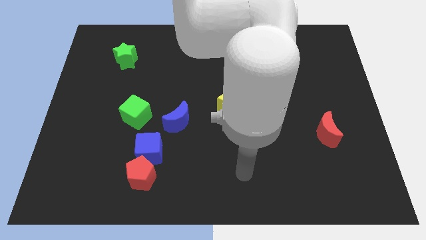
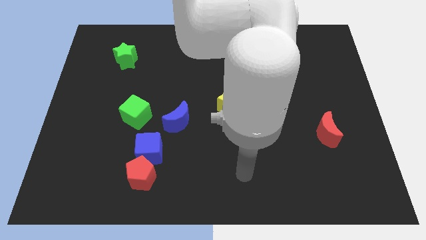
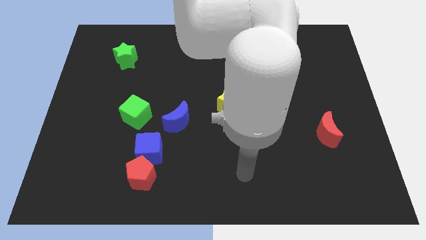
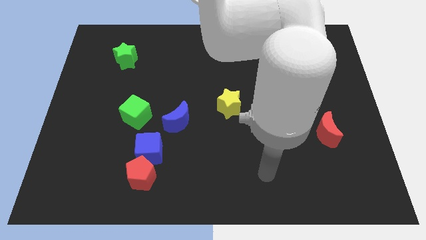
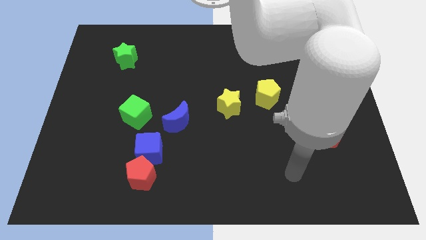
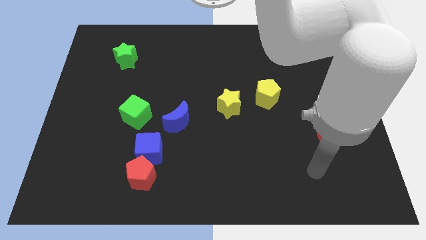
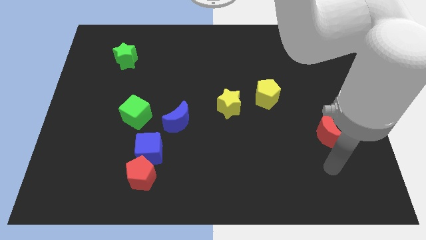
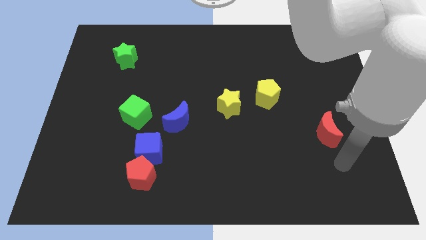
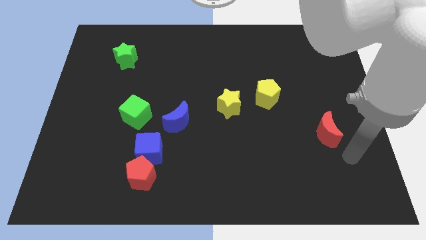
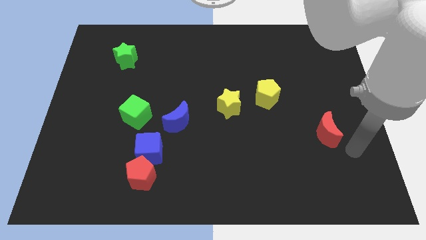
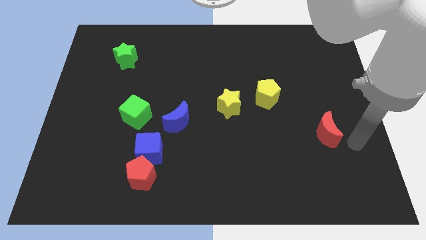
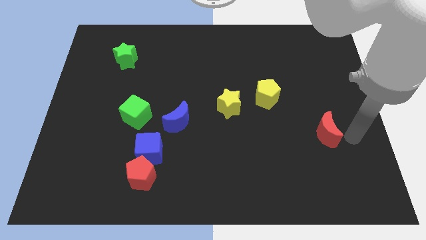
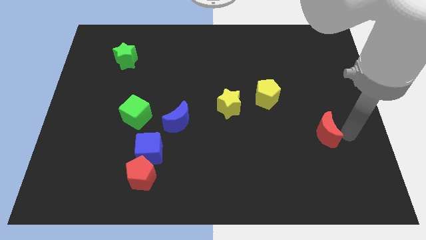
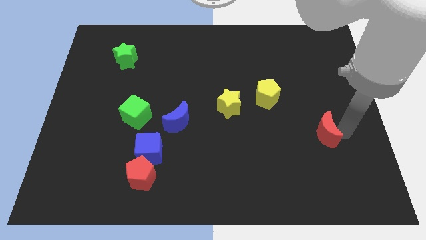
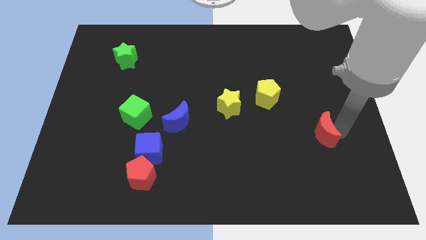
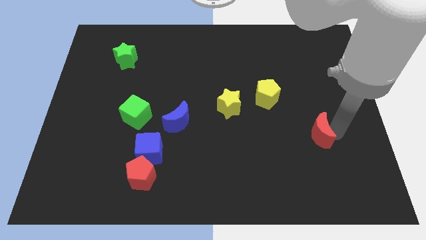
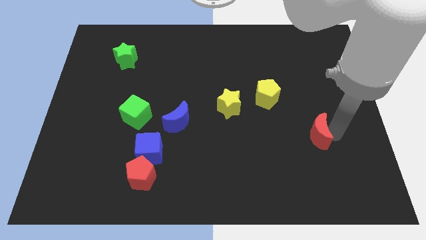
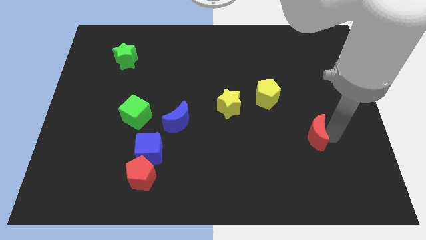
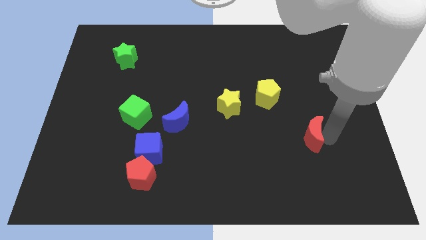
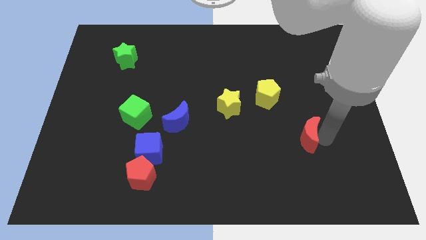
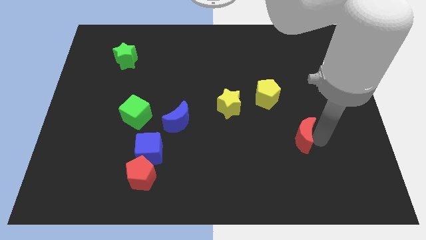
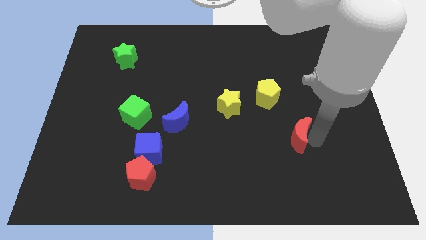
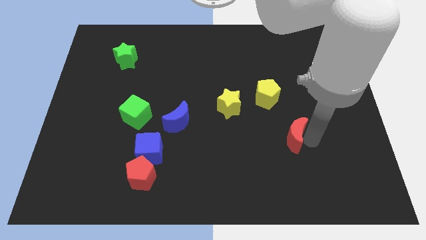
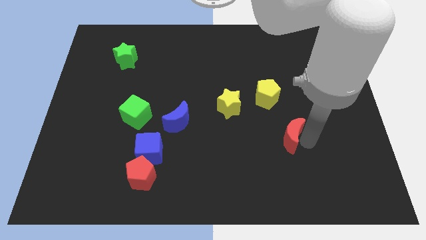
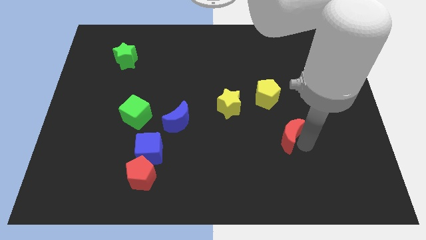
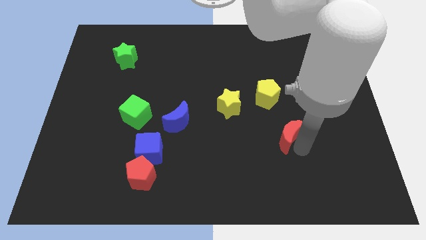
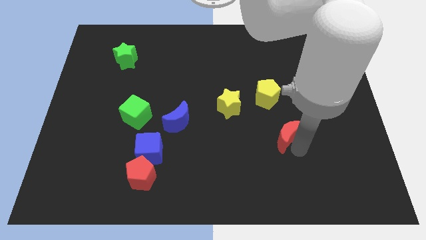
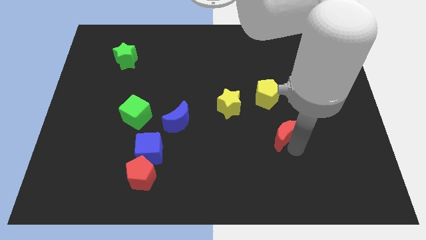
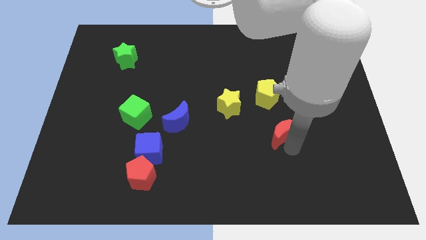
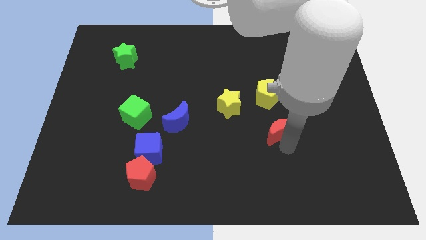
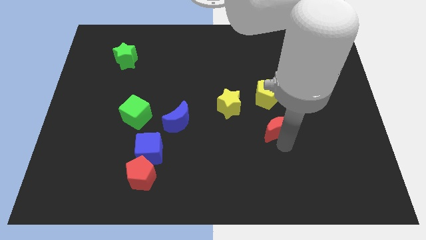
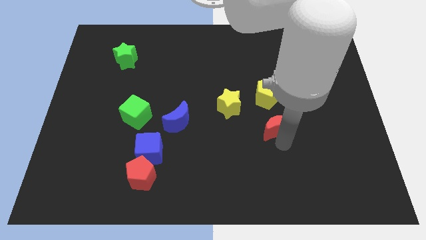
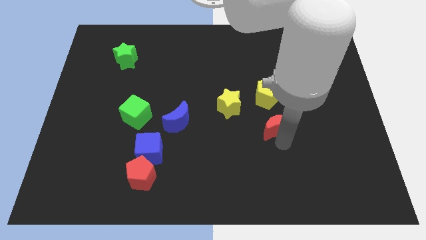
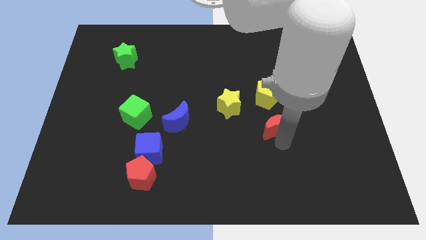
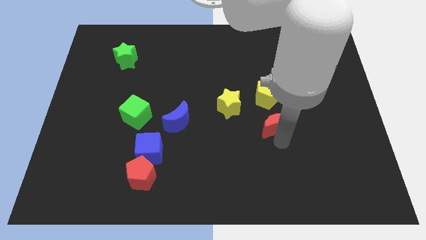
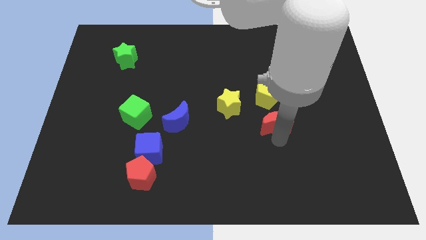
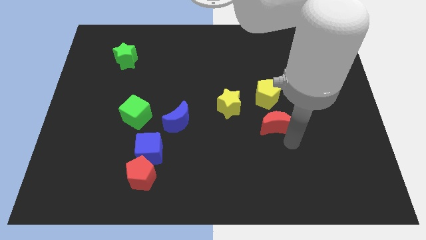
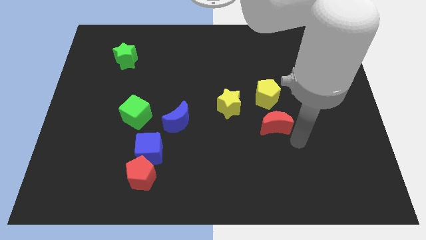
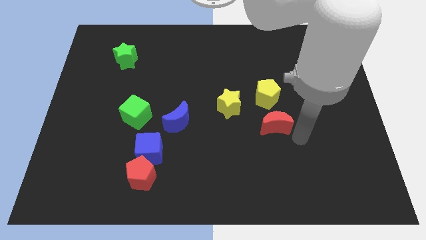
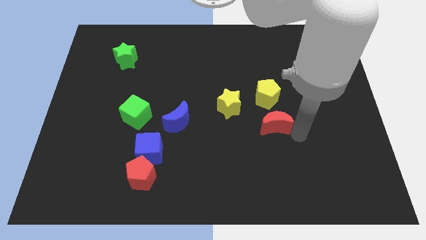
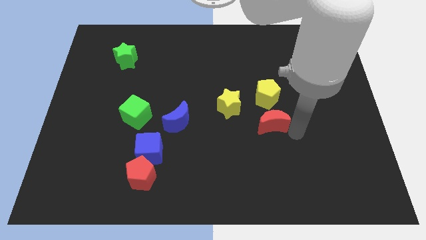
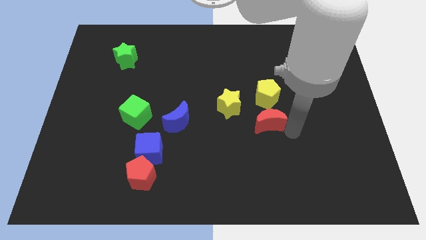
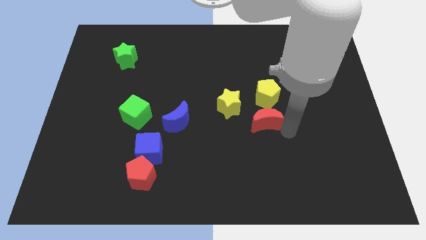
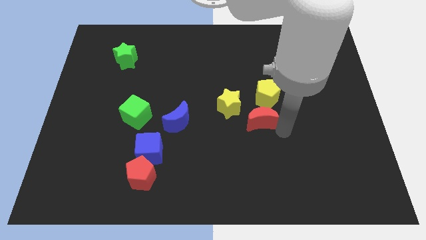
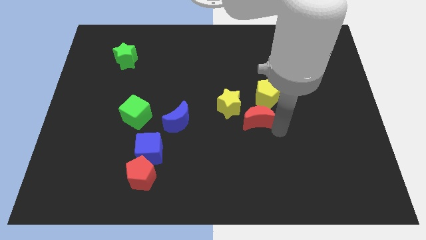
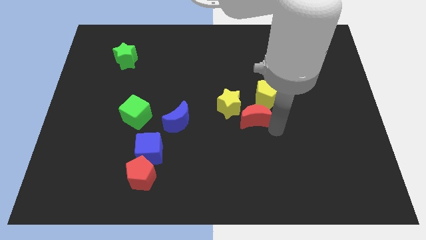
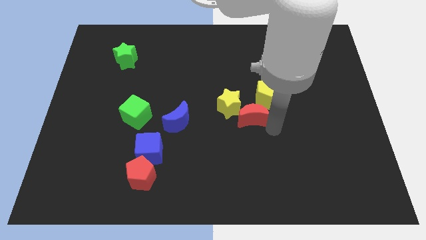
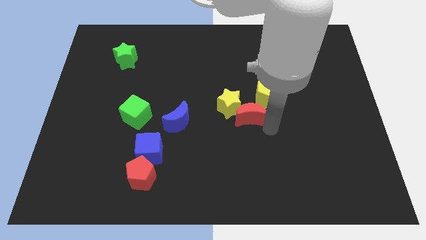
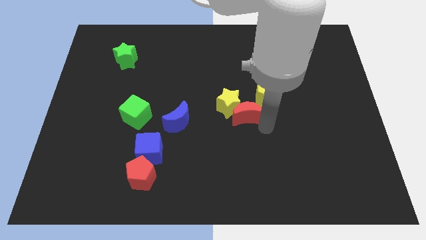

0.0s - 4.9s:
slide the red moon next to the yellow star

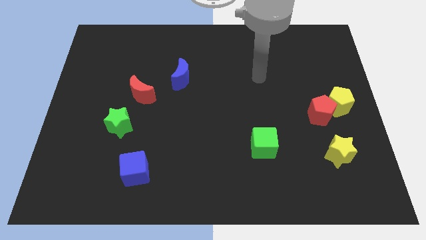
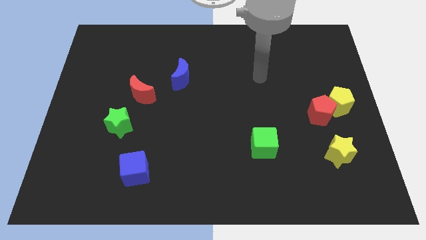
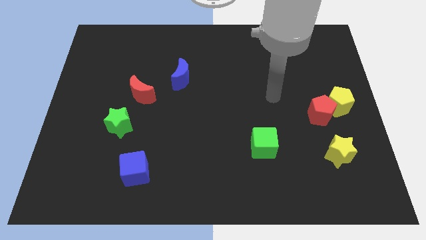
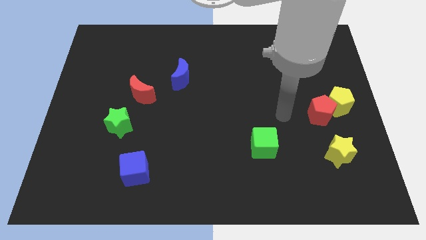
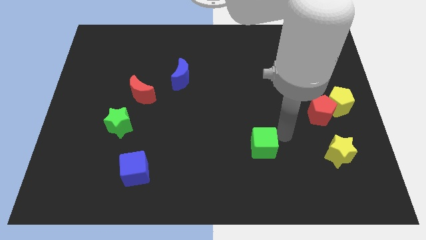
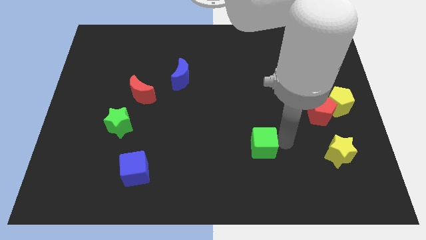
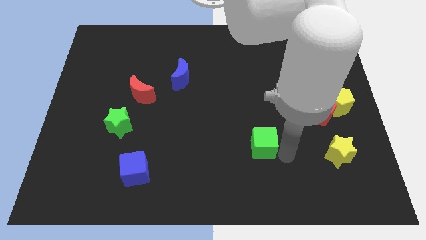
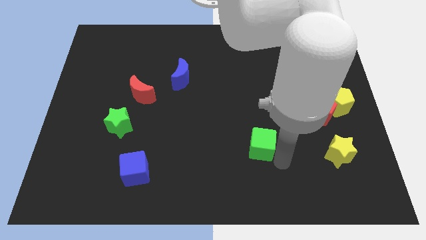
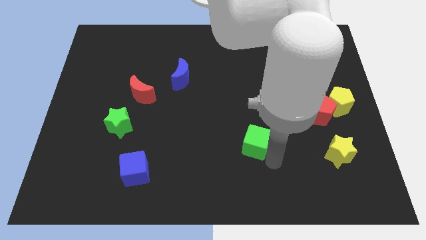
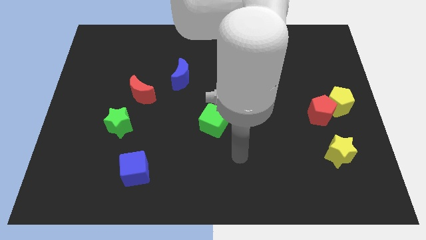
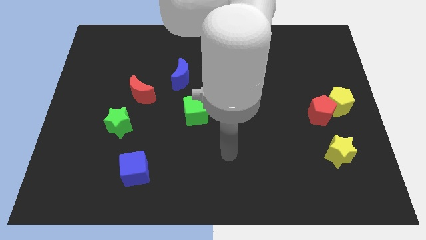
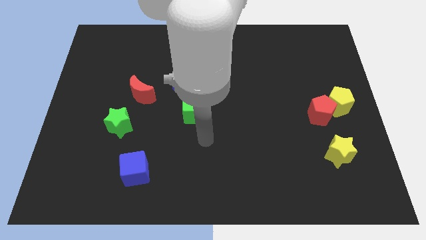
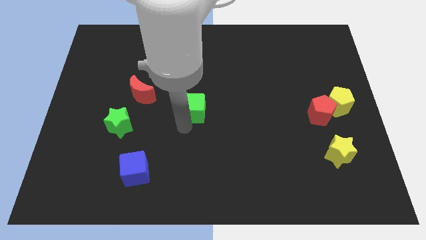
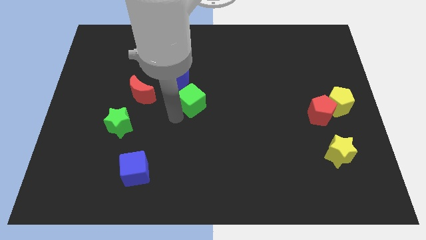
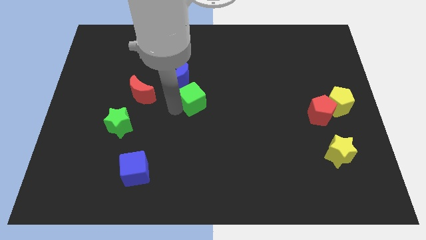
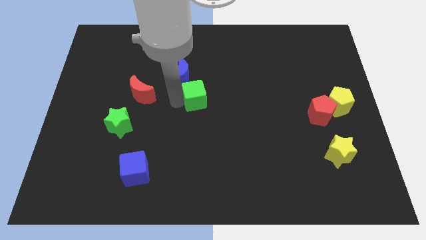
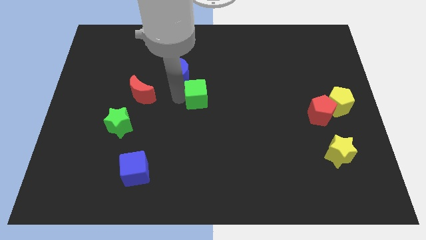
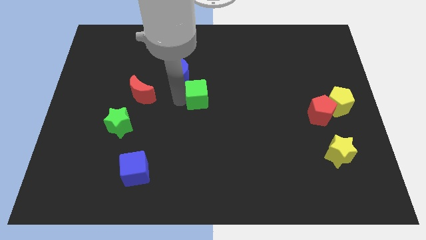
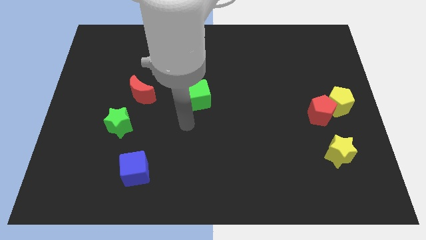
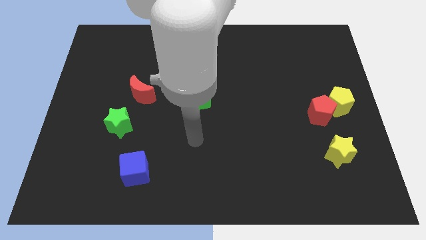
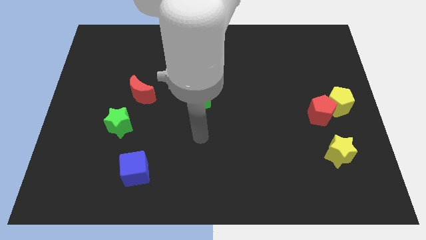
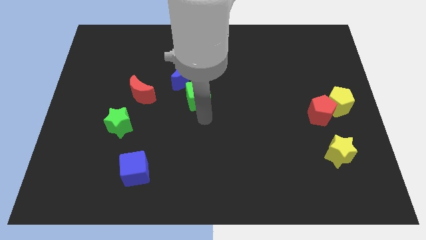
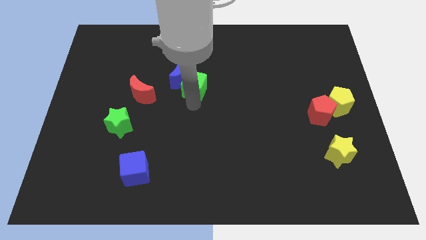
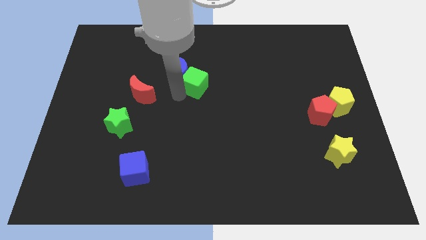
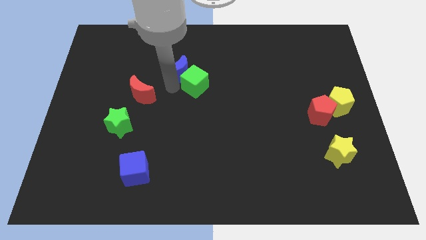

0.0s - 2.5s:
slide the green cube close to the blue moon

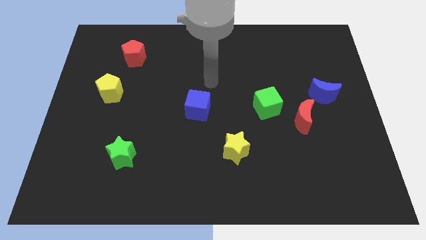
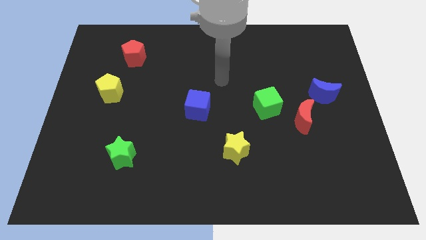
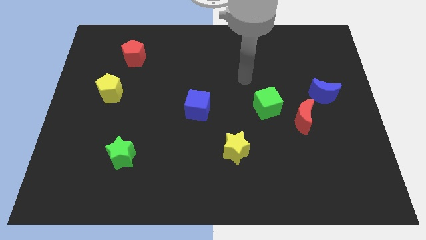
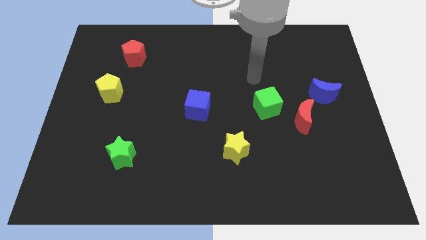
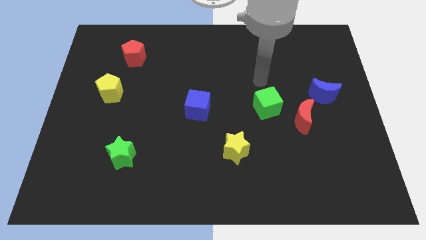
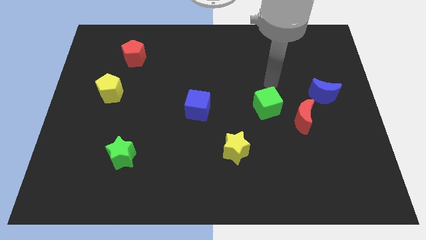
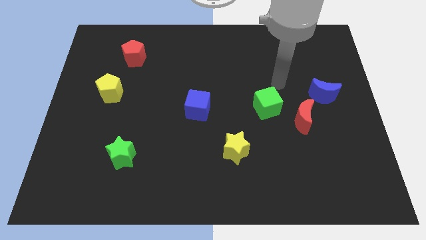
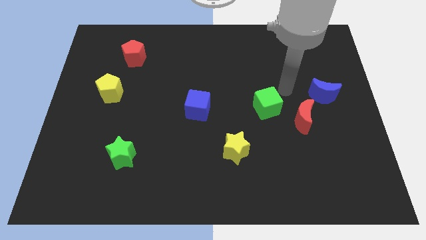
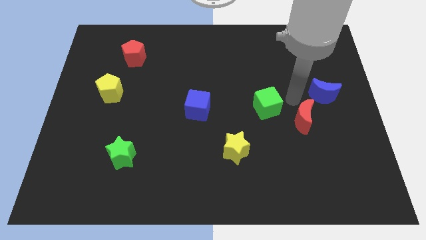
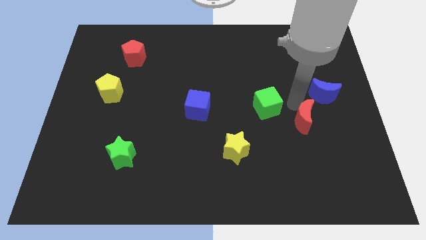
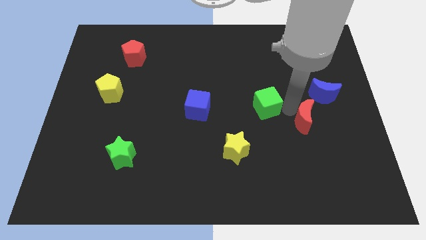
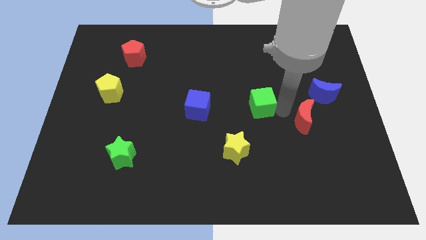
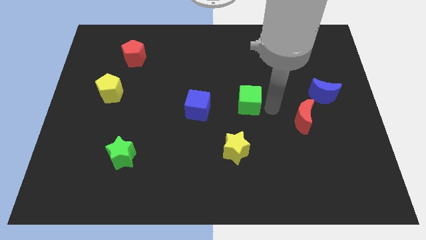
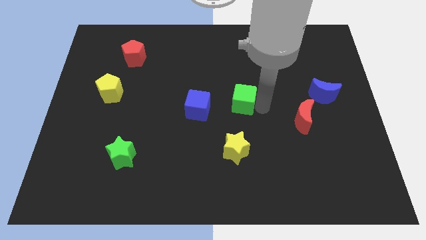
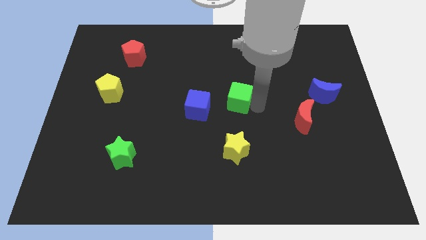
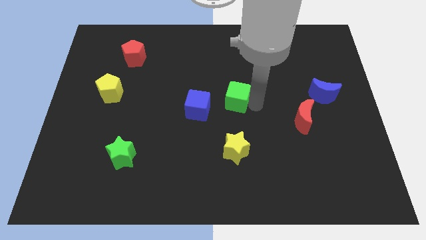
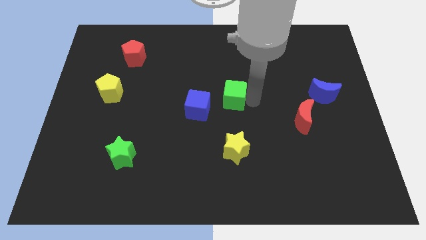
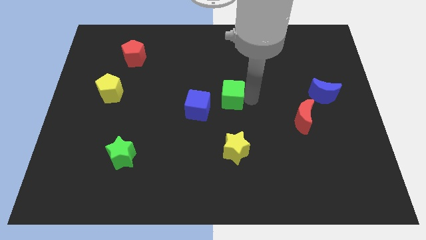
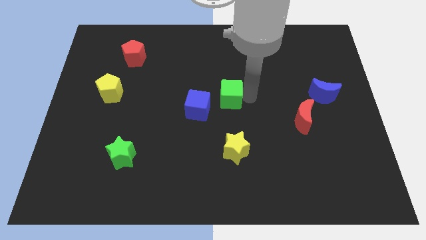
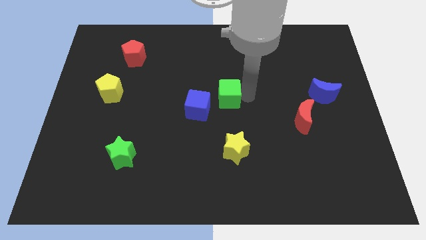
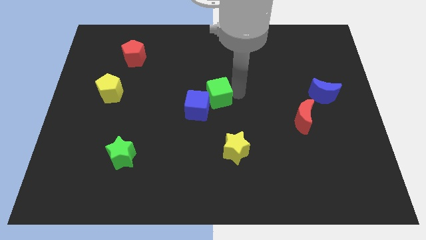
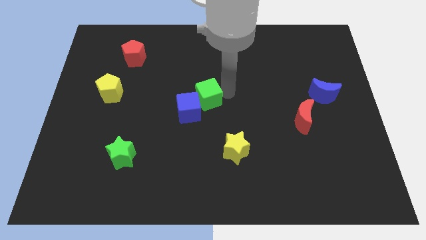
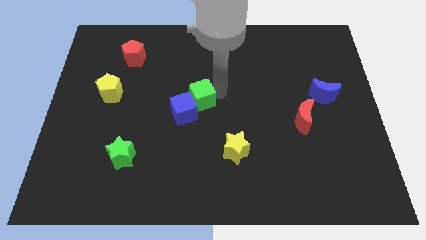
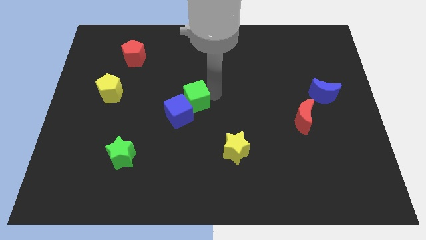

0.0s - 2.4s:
put the green cube to the blue cube
